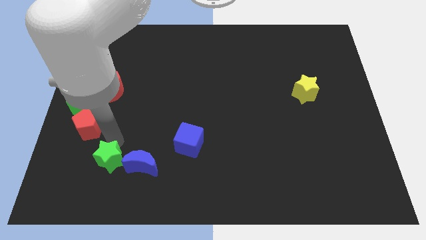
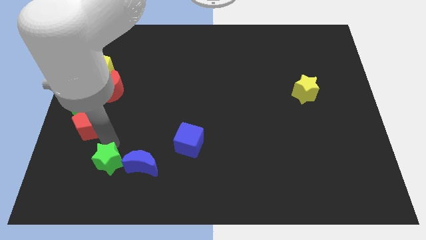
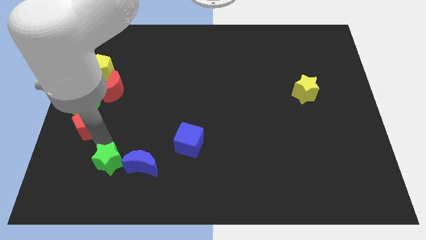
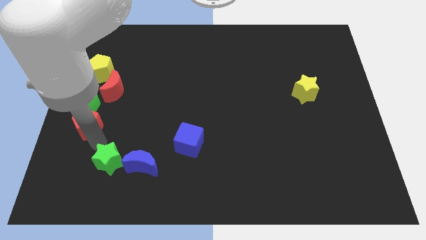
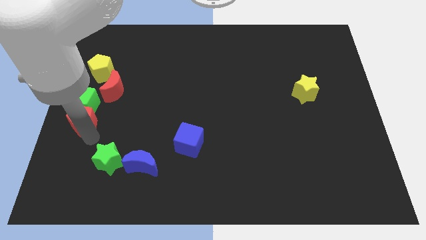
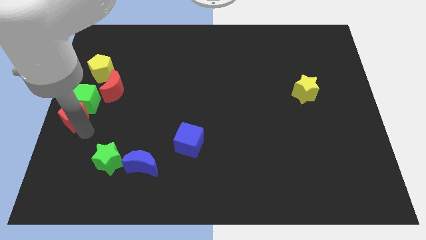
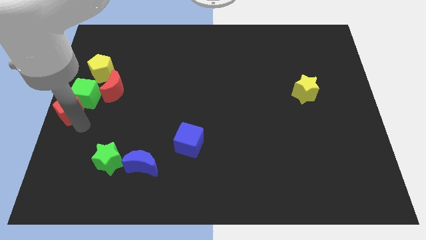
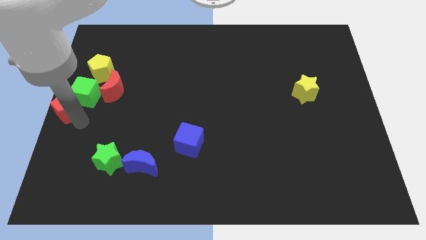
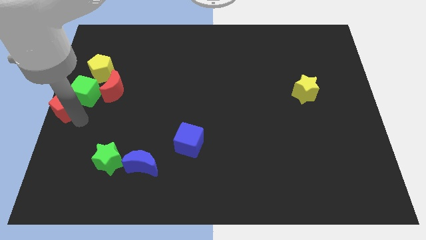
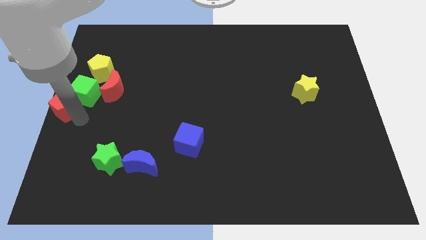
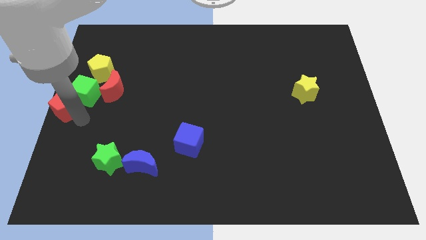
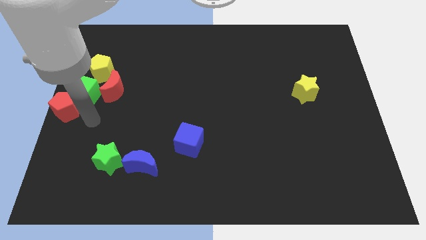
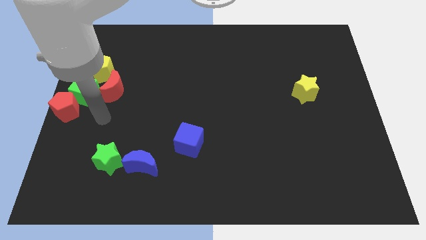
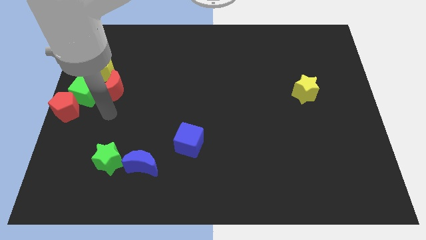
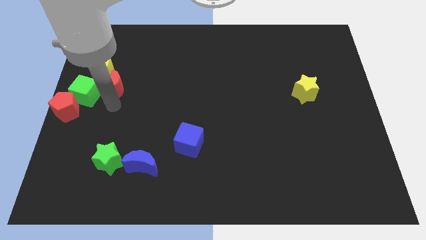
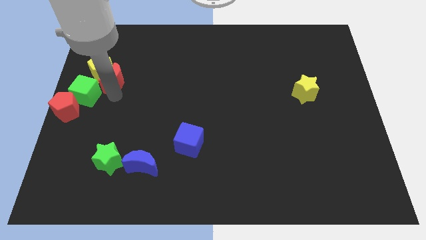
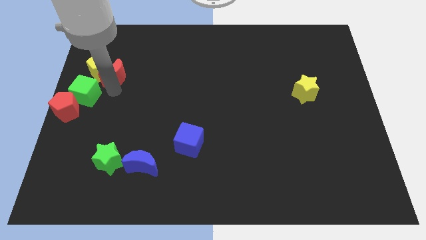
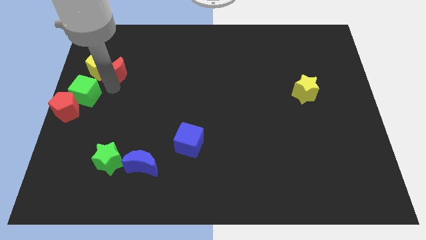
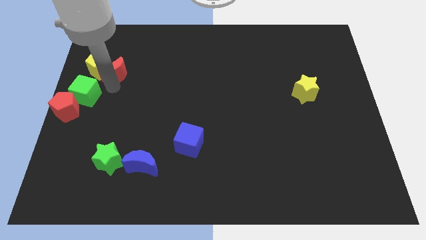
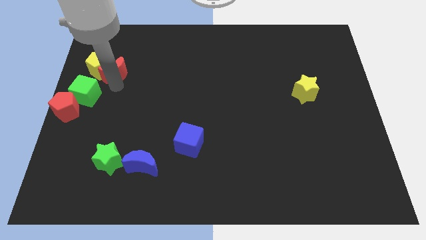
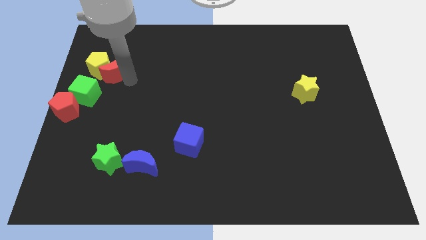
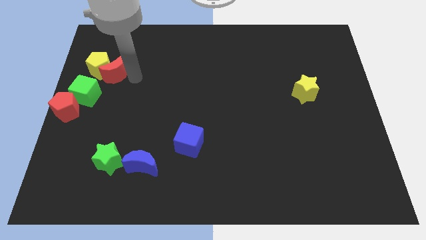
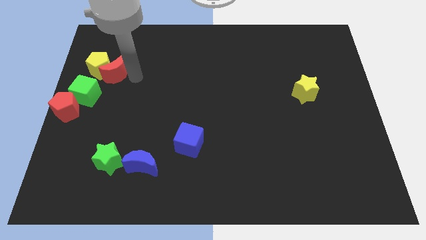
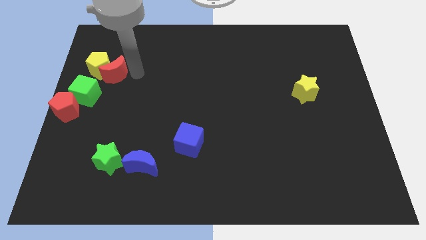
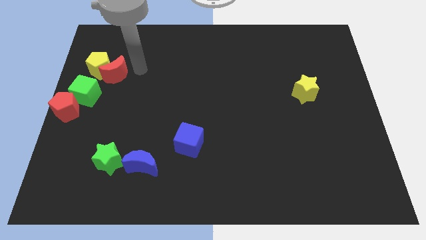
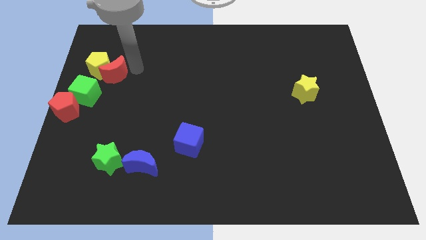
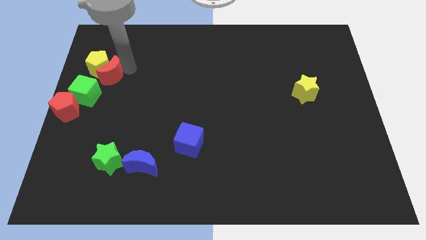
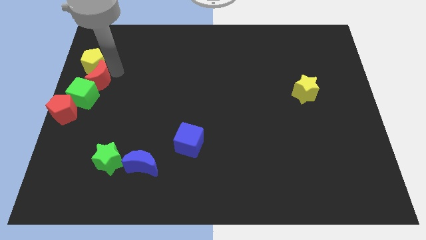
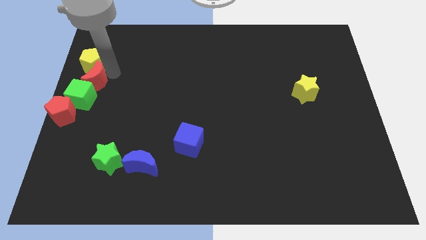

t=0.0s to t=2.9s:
push the red moon into the yellow pentagon

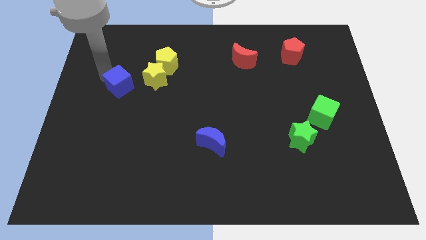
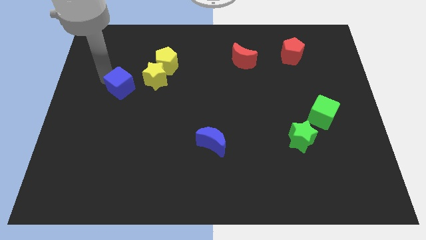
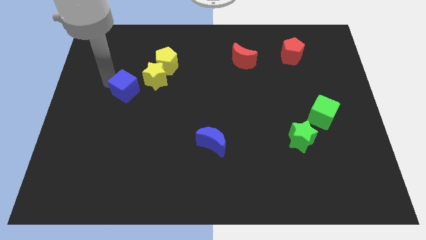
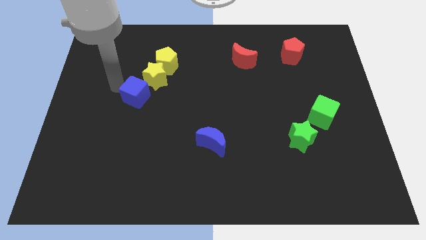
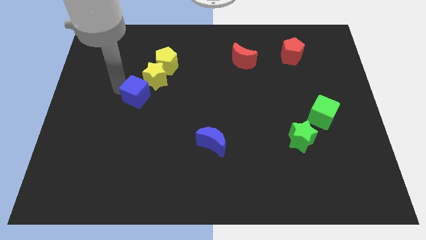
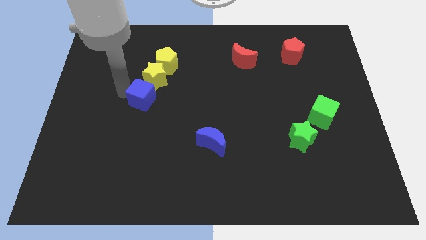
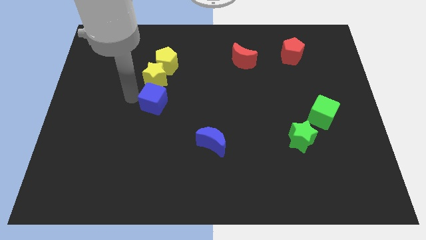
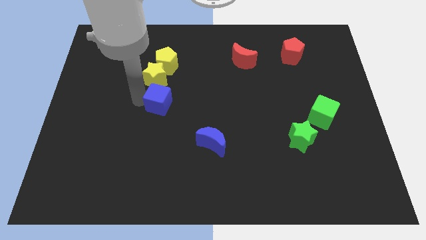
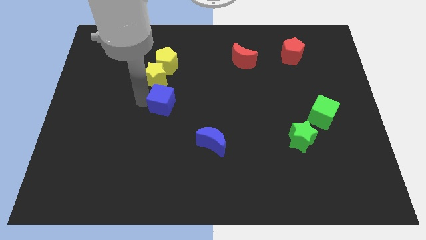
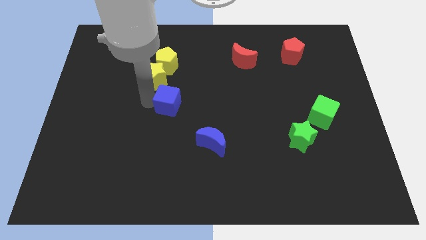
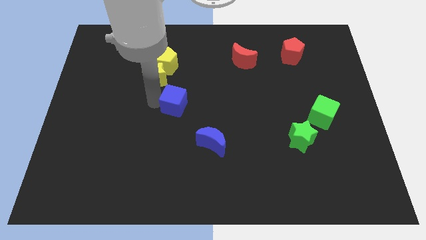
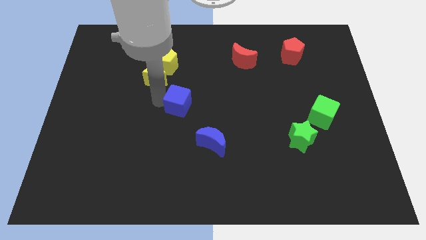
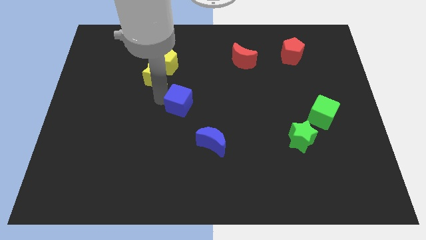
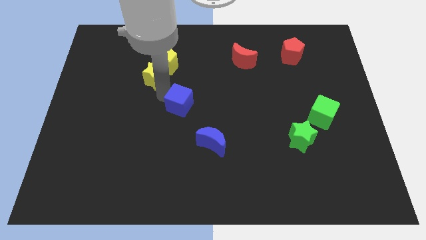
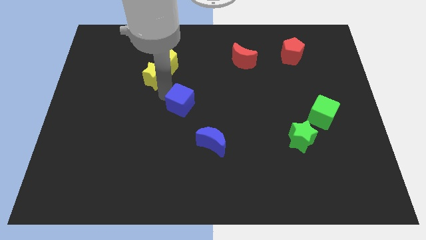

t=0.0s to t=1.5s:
move the blue cube diagonally to the yellow star

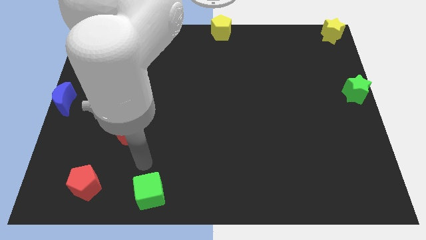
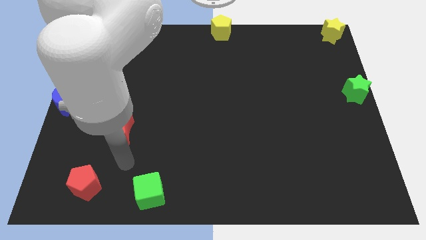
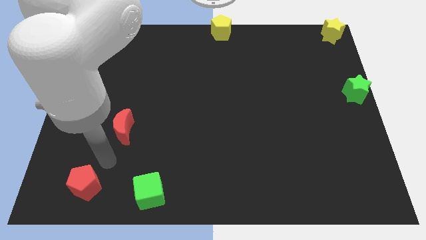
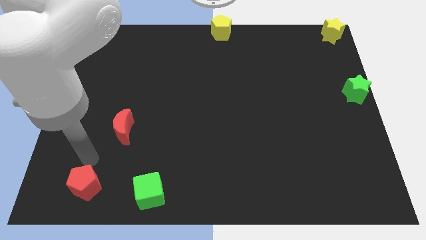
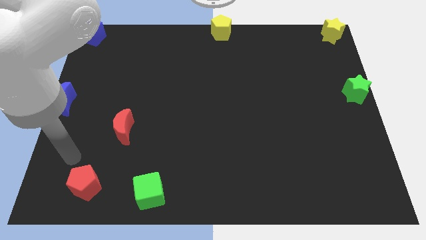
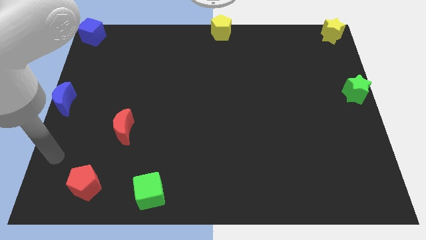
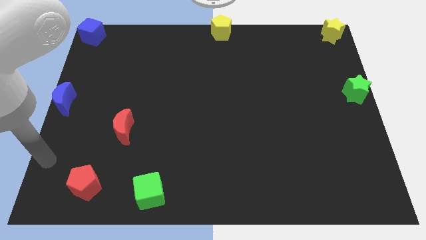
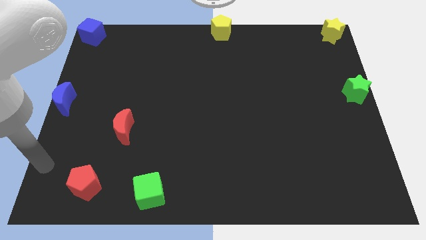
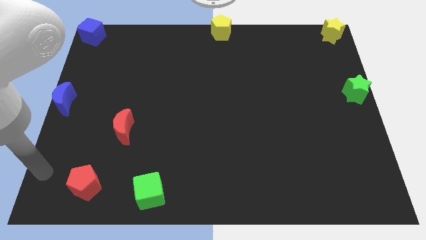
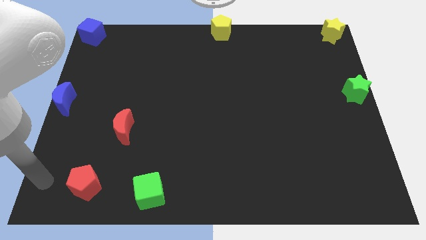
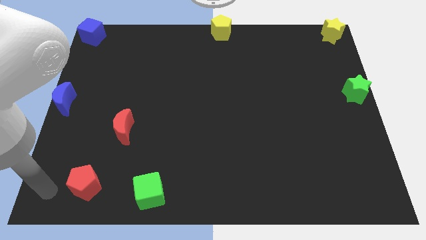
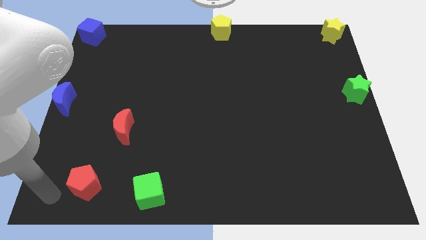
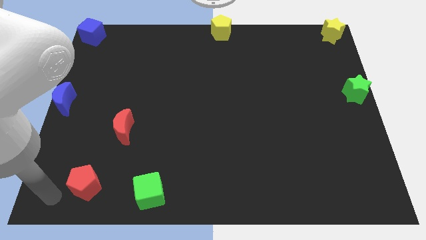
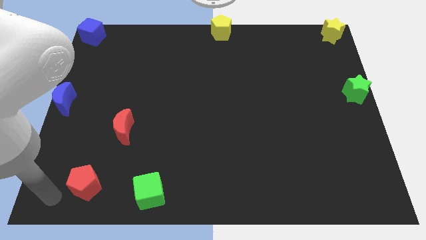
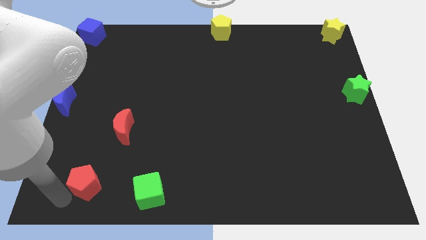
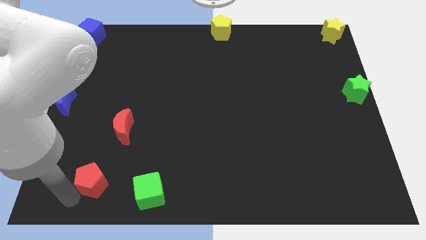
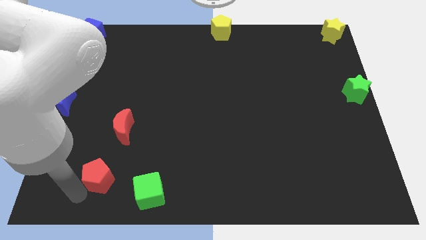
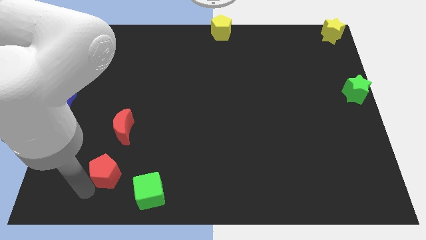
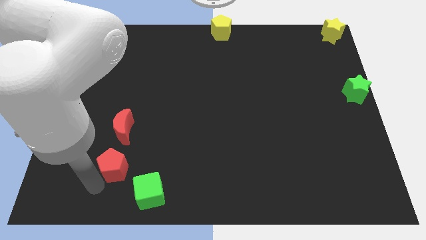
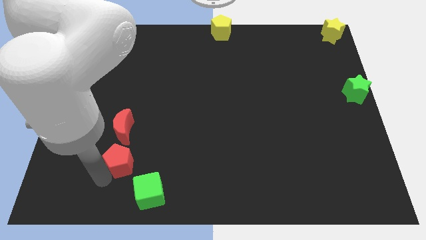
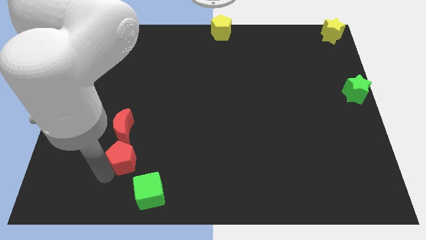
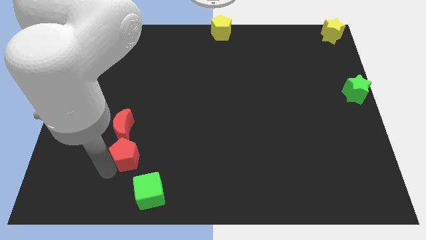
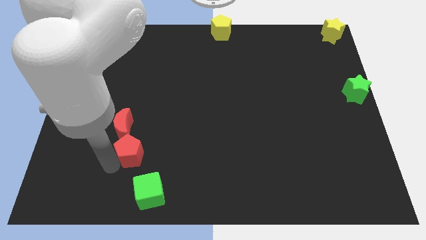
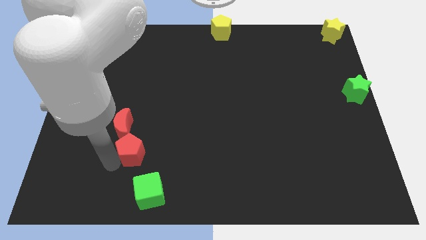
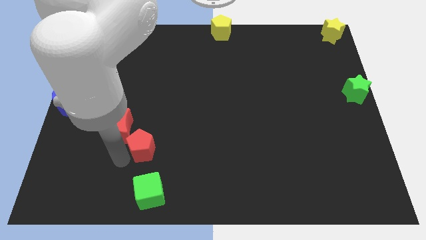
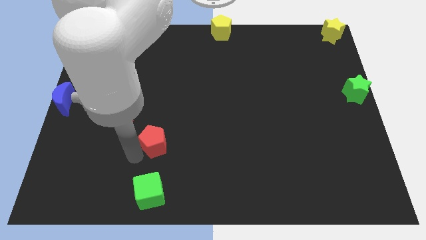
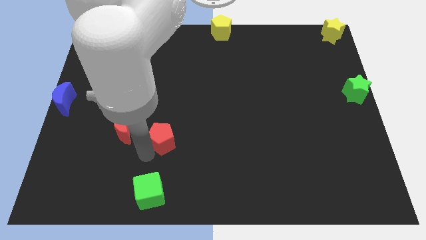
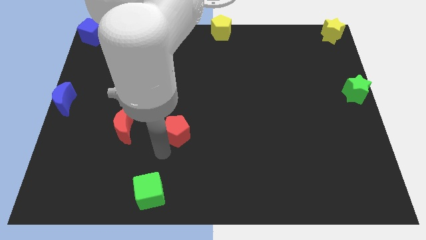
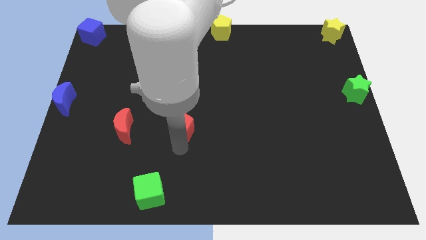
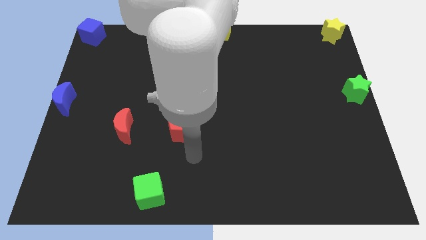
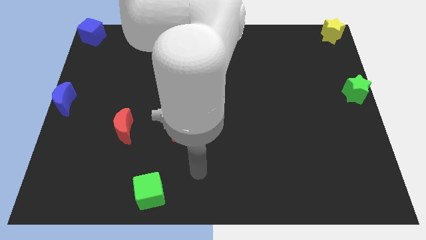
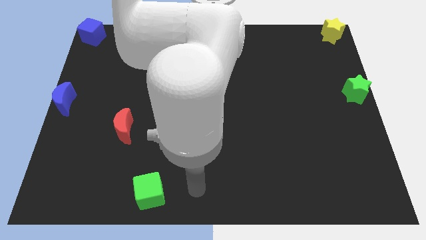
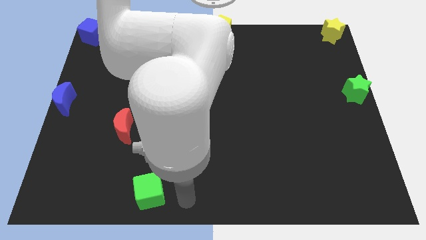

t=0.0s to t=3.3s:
move the red pentagon to the right side of the red crescent

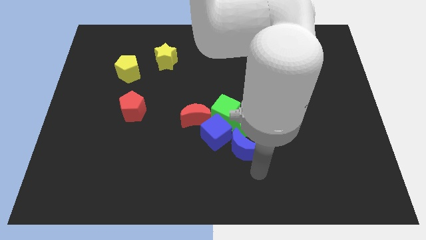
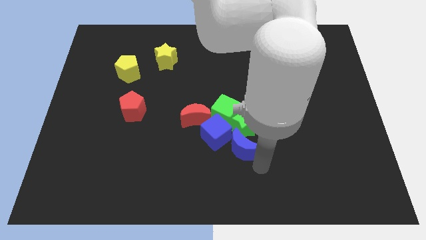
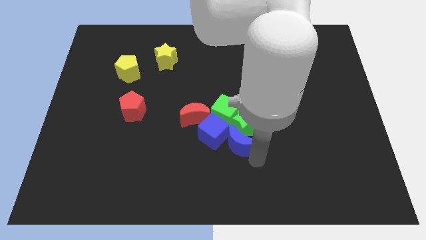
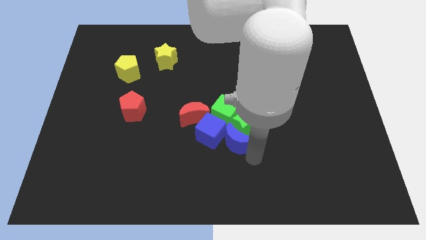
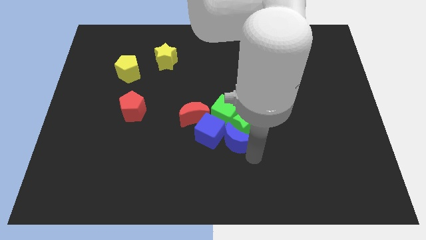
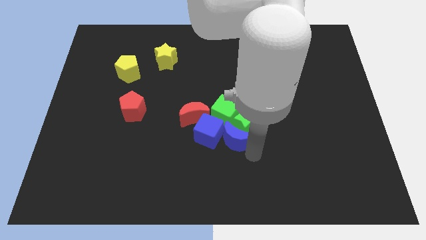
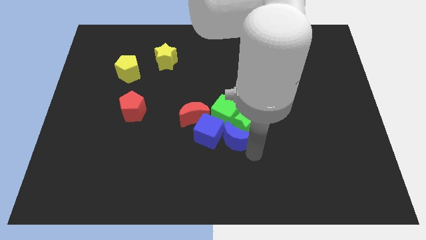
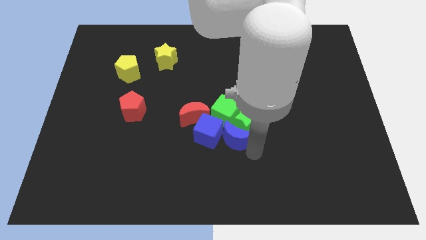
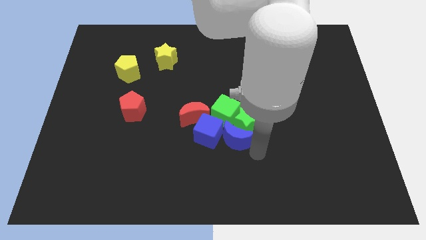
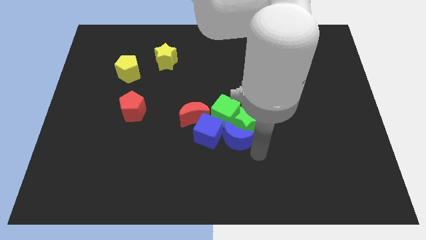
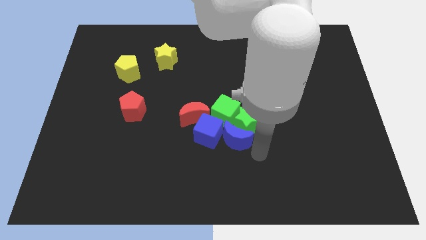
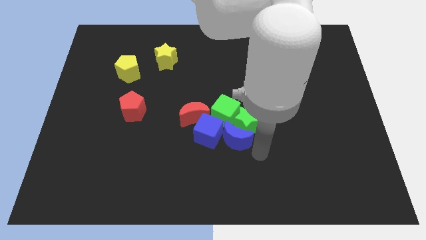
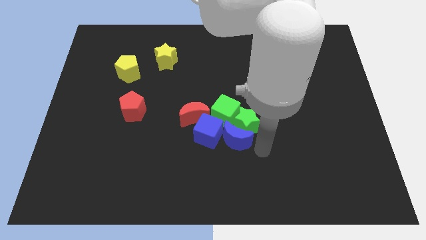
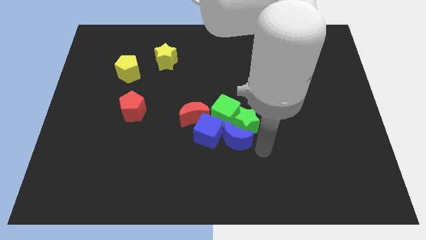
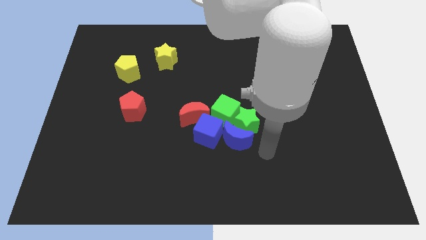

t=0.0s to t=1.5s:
place the blue moon below the green star
